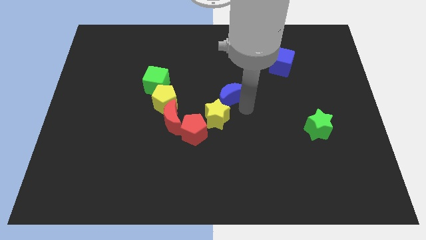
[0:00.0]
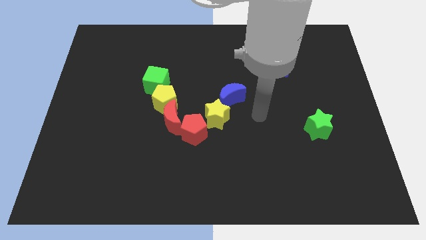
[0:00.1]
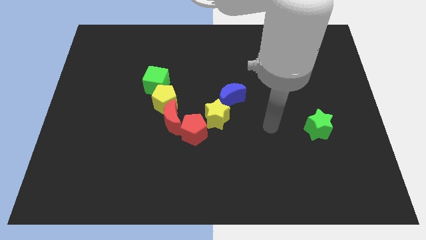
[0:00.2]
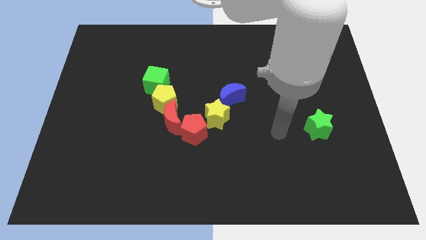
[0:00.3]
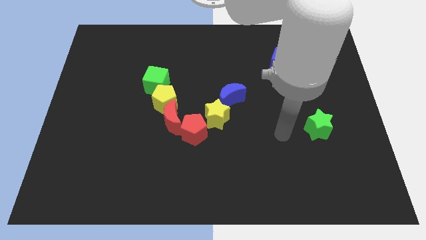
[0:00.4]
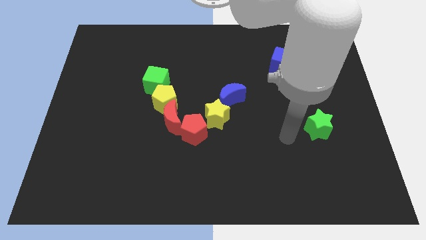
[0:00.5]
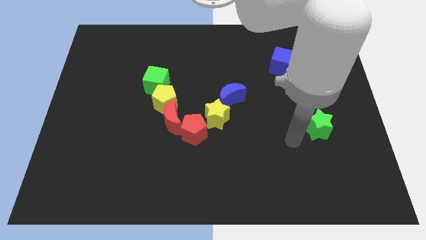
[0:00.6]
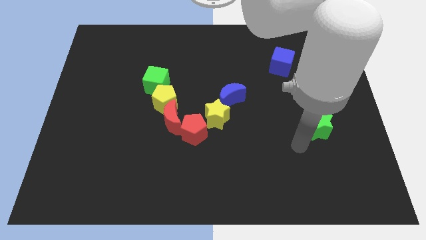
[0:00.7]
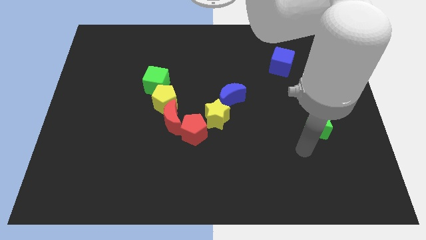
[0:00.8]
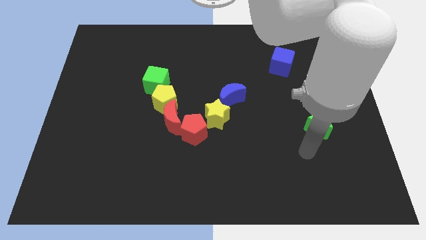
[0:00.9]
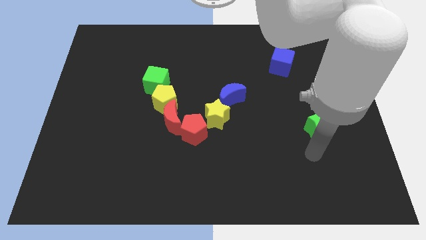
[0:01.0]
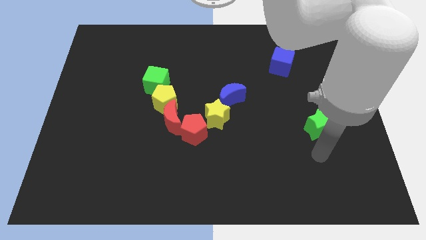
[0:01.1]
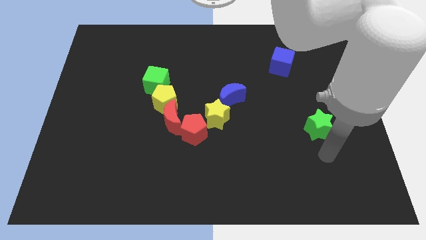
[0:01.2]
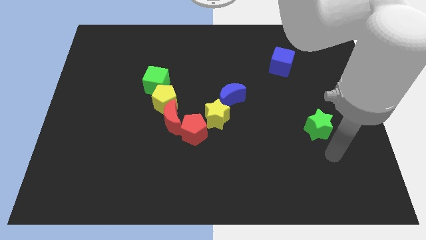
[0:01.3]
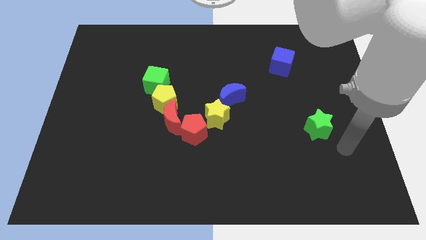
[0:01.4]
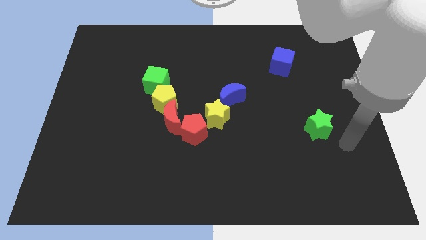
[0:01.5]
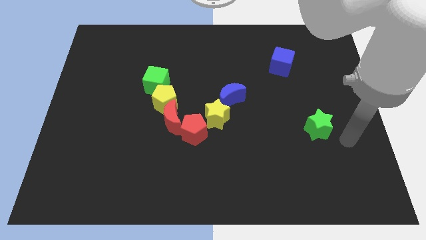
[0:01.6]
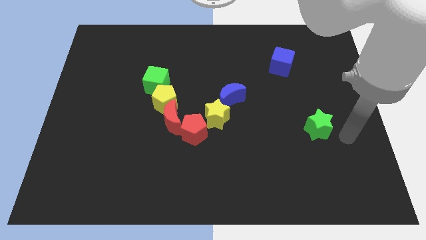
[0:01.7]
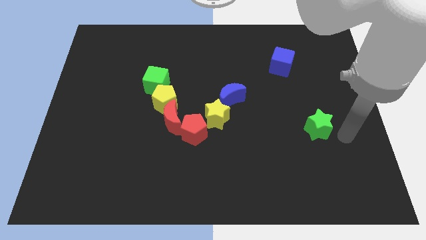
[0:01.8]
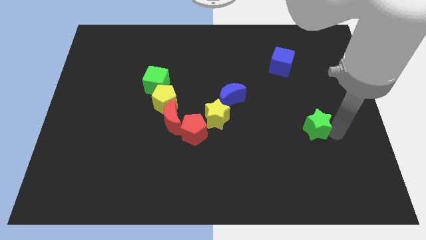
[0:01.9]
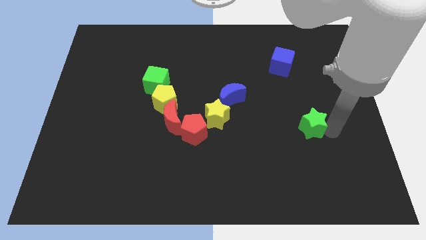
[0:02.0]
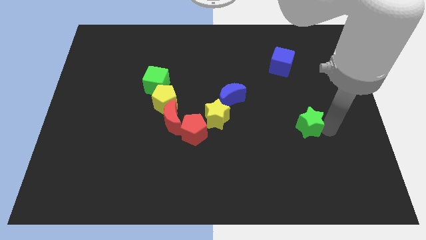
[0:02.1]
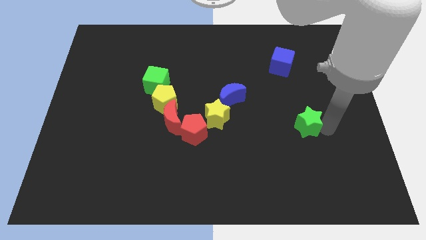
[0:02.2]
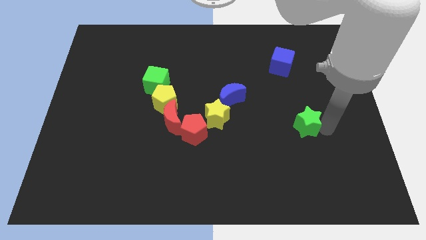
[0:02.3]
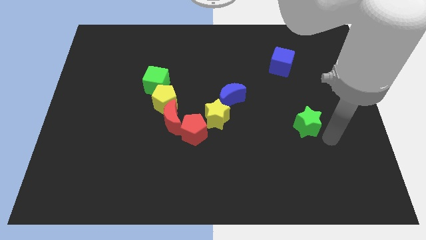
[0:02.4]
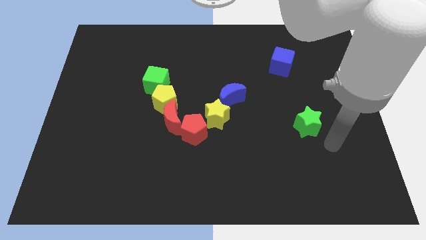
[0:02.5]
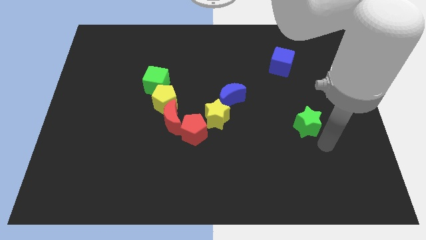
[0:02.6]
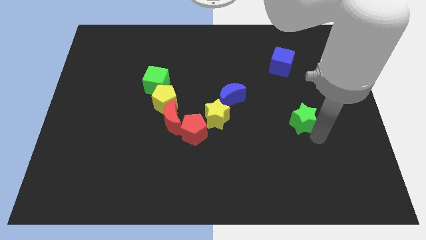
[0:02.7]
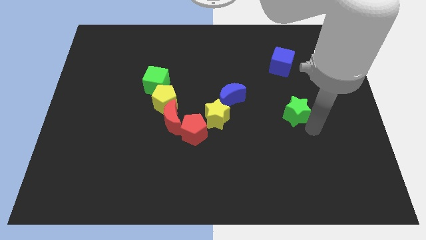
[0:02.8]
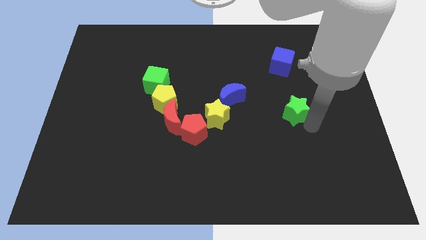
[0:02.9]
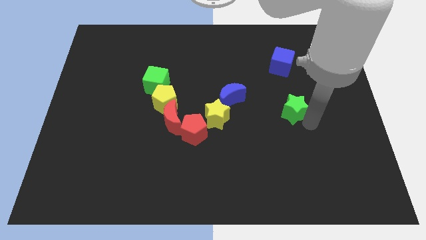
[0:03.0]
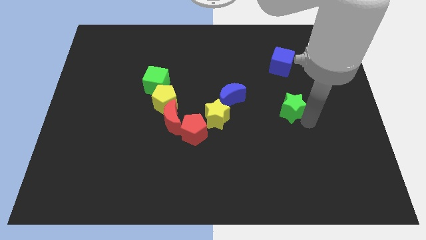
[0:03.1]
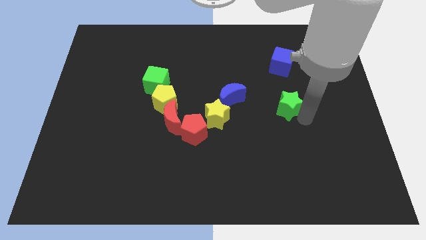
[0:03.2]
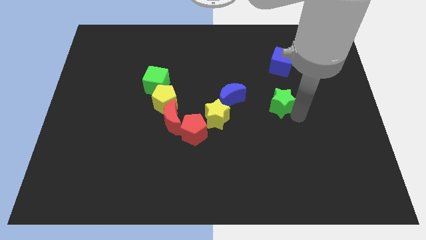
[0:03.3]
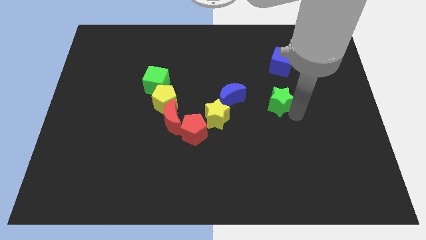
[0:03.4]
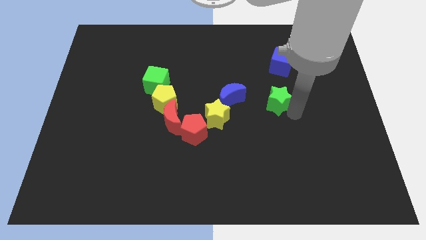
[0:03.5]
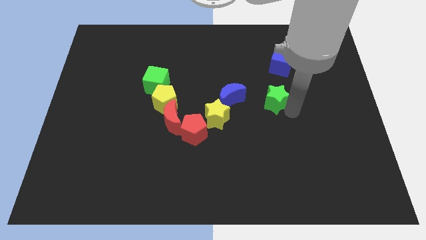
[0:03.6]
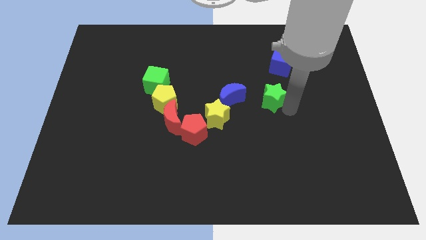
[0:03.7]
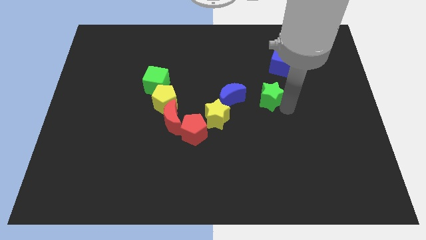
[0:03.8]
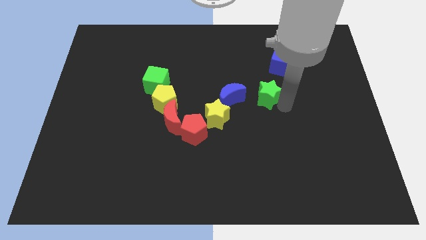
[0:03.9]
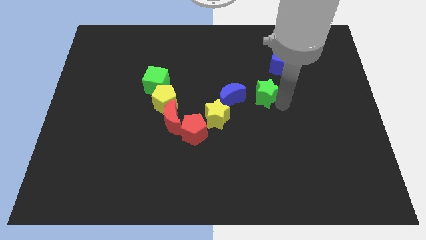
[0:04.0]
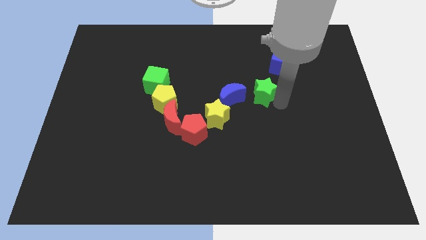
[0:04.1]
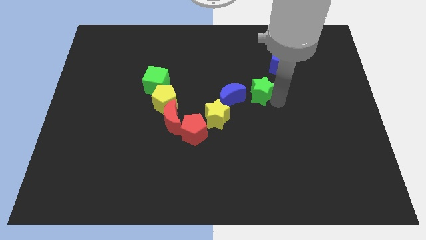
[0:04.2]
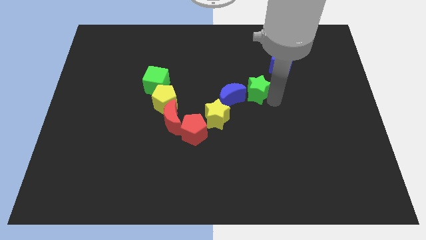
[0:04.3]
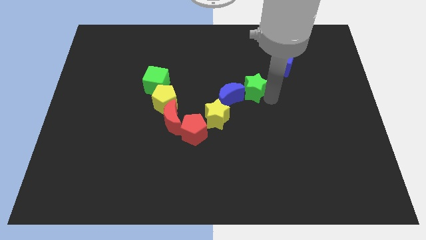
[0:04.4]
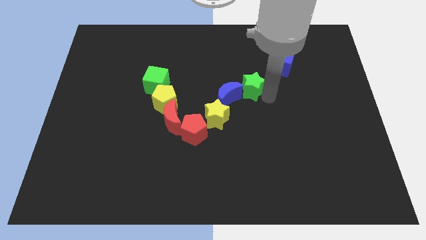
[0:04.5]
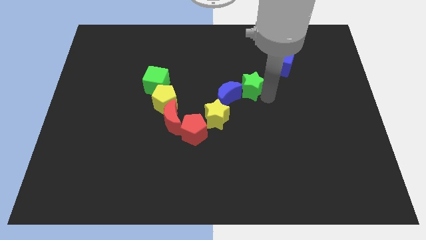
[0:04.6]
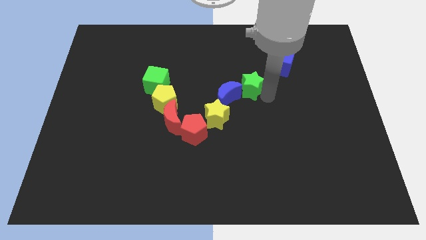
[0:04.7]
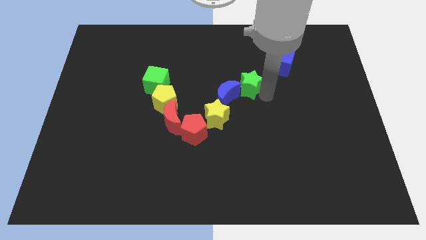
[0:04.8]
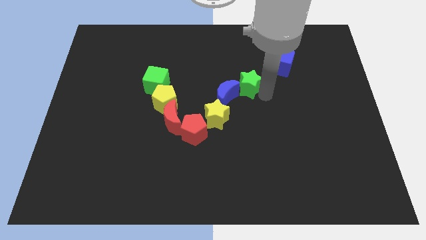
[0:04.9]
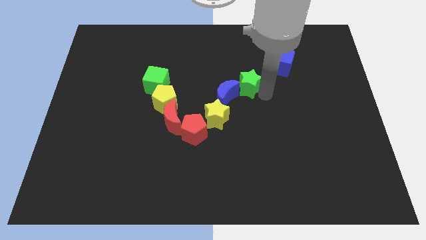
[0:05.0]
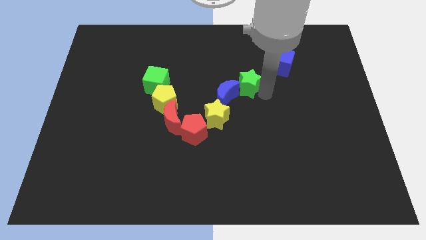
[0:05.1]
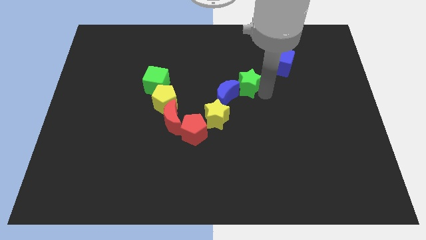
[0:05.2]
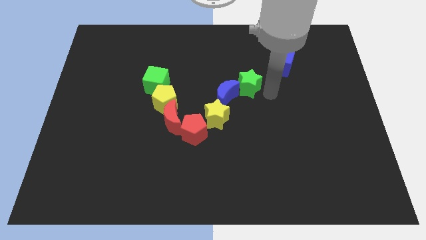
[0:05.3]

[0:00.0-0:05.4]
push the green star to the top right of blue crescent

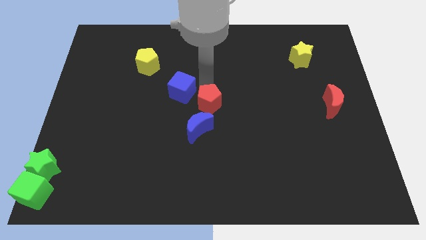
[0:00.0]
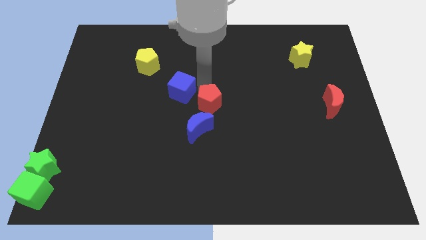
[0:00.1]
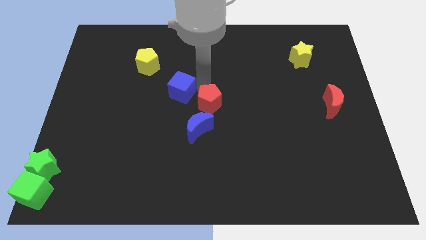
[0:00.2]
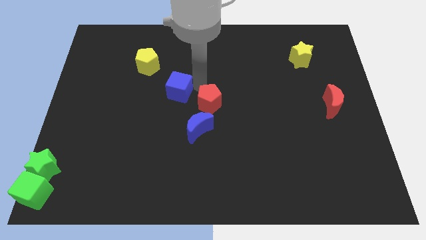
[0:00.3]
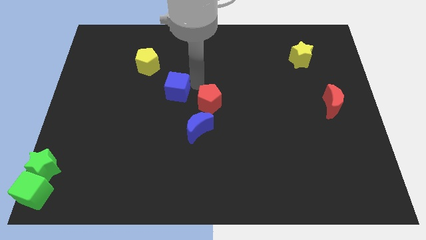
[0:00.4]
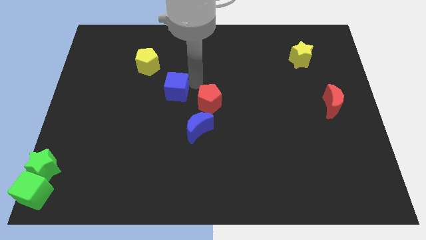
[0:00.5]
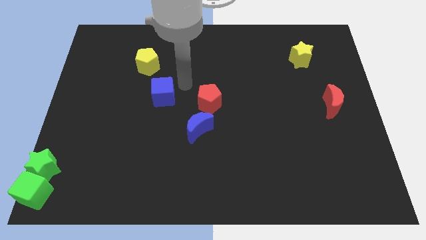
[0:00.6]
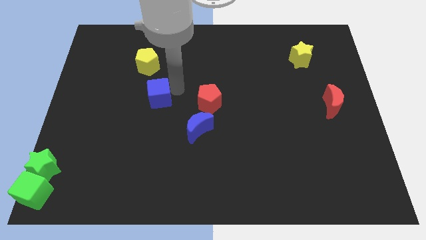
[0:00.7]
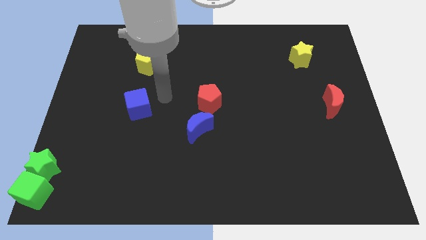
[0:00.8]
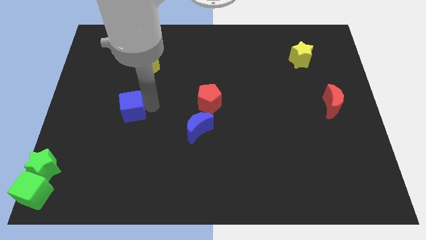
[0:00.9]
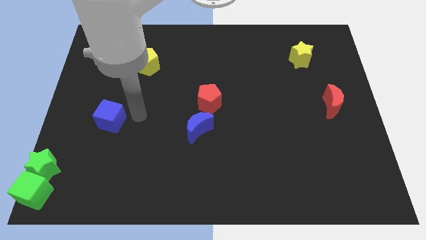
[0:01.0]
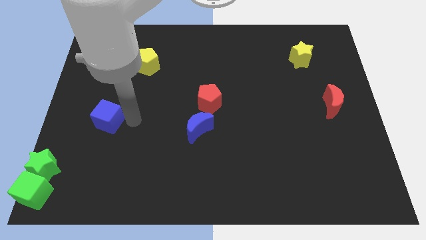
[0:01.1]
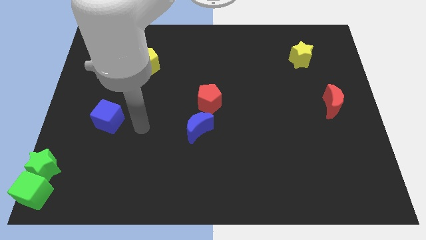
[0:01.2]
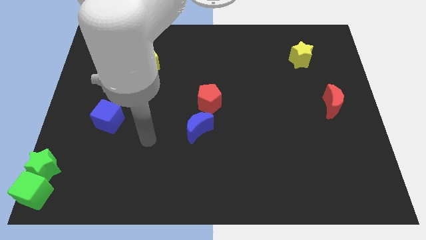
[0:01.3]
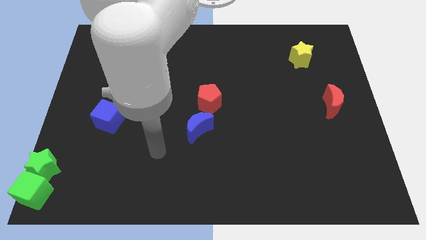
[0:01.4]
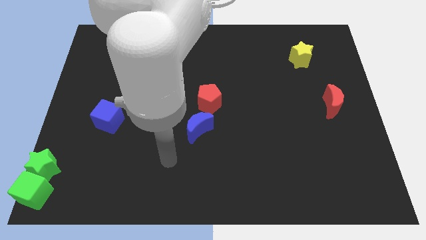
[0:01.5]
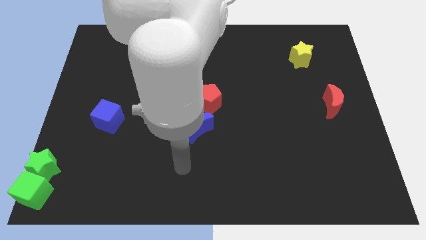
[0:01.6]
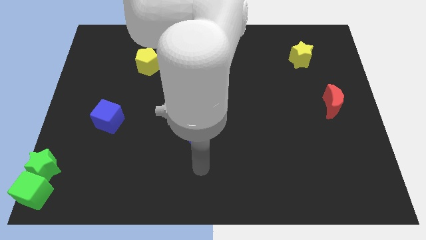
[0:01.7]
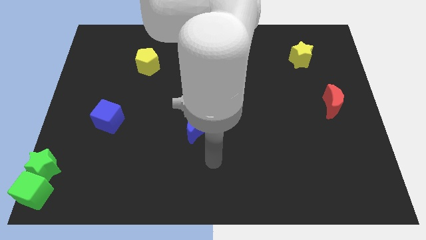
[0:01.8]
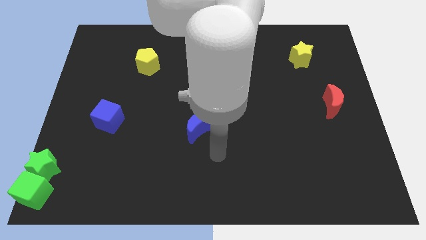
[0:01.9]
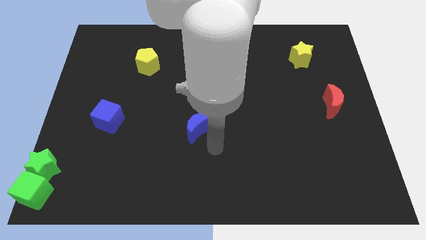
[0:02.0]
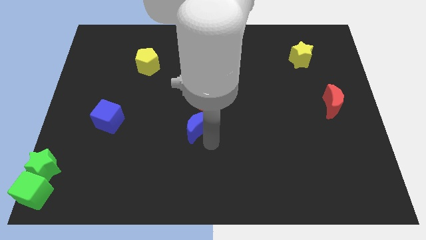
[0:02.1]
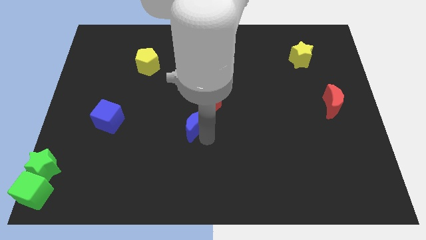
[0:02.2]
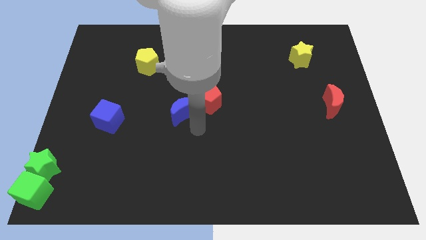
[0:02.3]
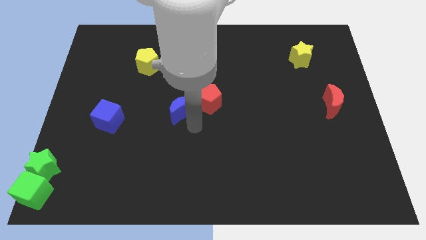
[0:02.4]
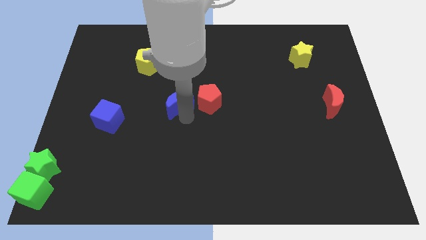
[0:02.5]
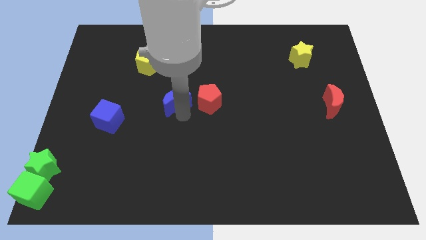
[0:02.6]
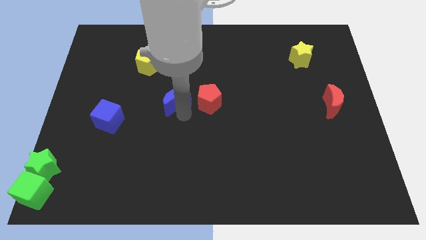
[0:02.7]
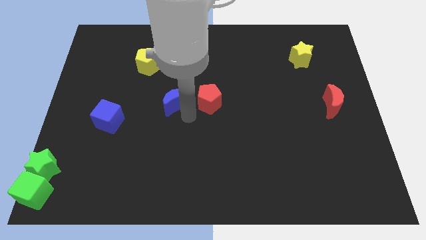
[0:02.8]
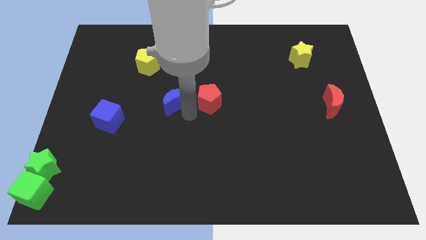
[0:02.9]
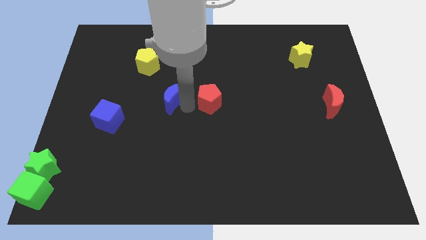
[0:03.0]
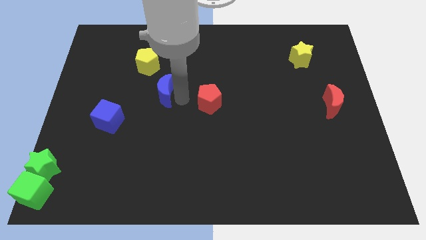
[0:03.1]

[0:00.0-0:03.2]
place your hand in between the blue crescent and red pentagon

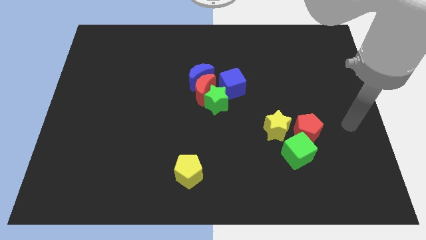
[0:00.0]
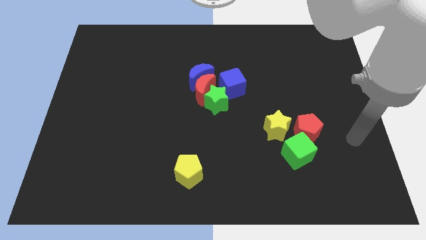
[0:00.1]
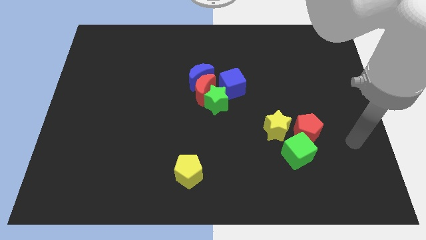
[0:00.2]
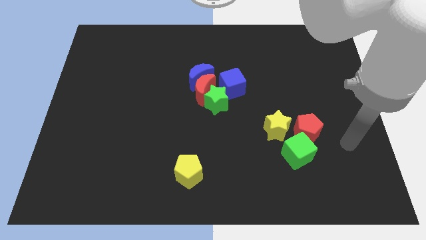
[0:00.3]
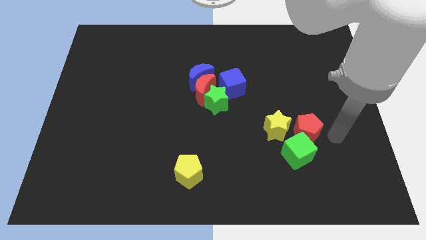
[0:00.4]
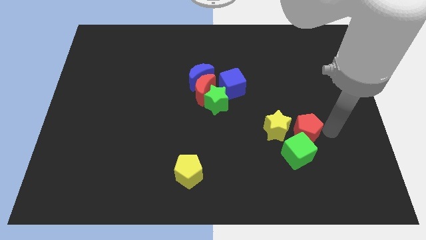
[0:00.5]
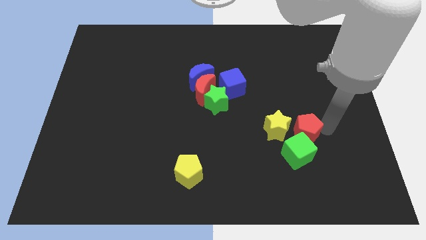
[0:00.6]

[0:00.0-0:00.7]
go near red pentagon
